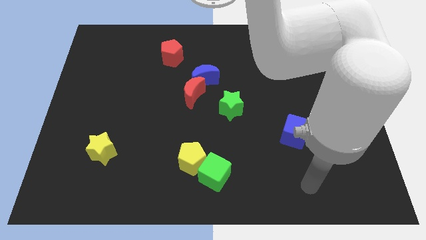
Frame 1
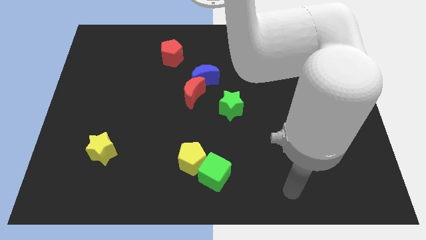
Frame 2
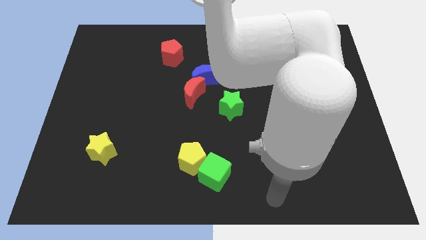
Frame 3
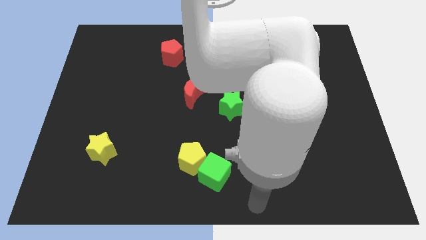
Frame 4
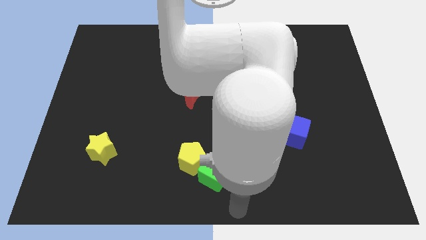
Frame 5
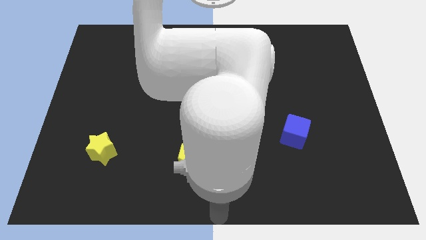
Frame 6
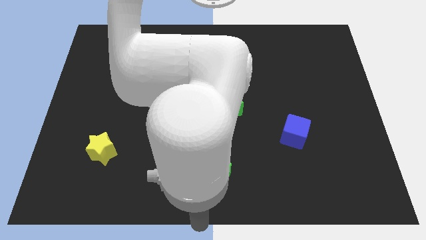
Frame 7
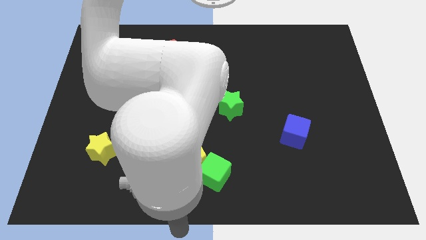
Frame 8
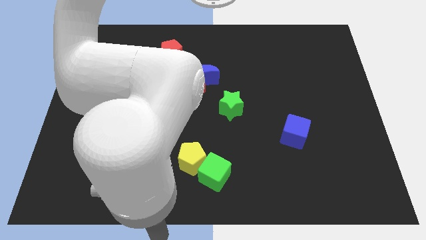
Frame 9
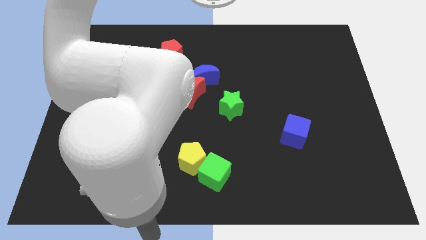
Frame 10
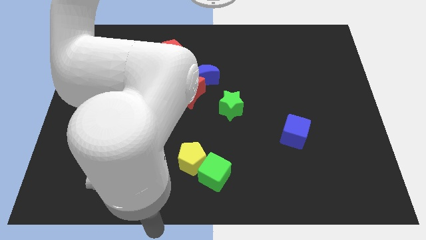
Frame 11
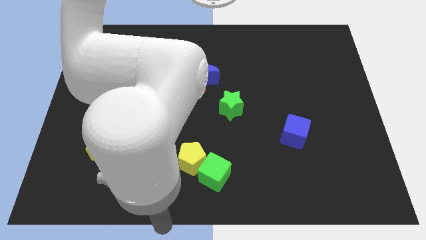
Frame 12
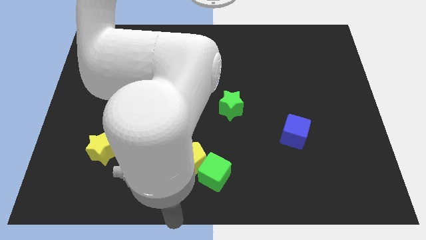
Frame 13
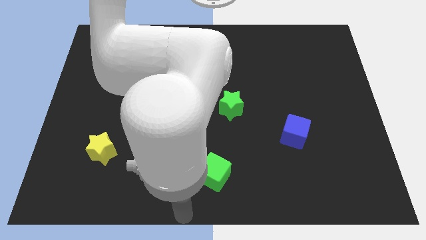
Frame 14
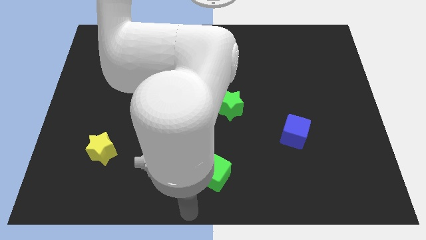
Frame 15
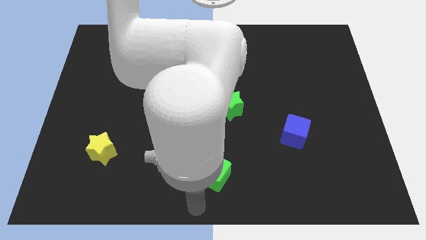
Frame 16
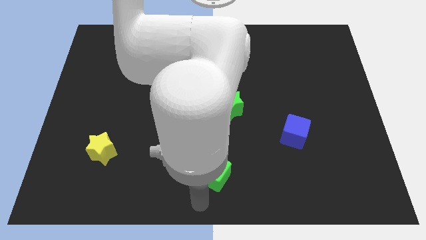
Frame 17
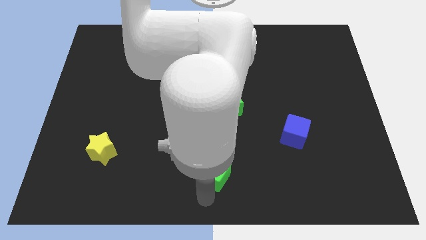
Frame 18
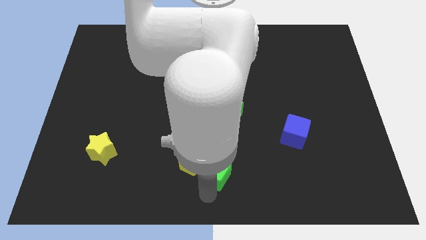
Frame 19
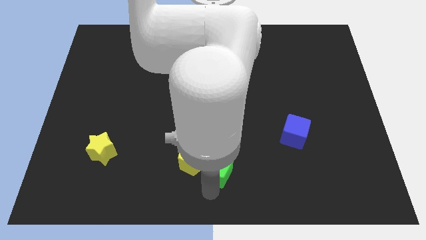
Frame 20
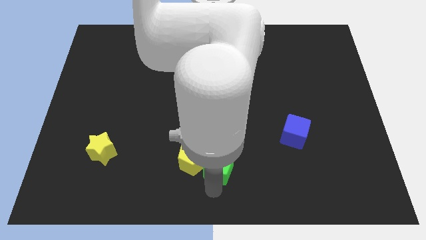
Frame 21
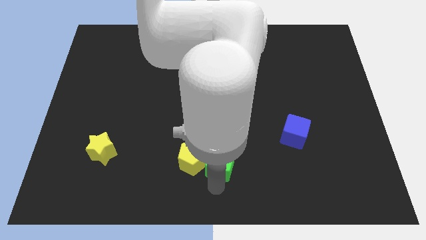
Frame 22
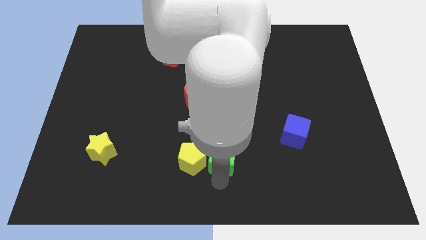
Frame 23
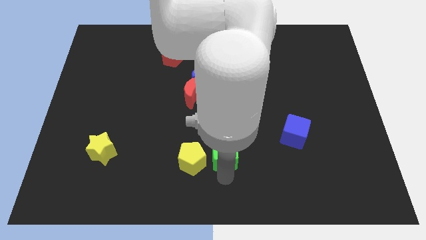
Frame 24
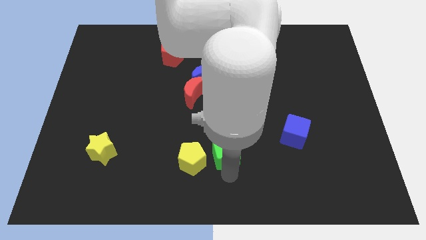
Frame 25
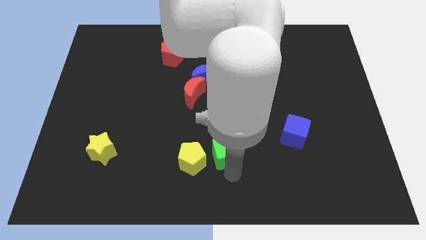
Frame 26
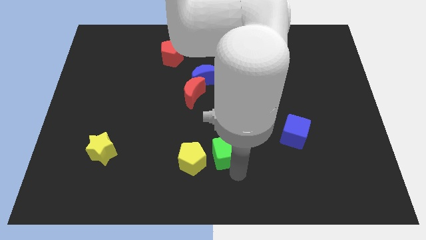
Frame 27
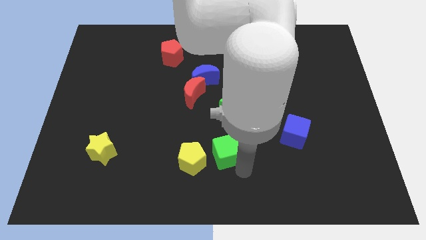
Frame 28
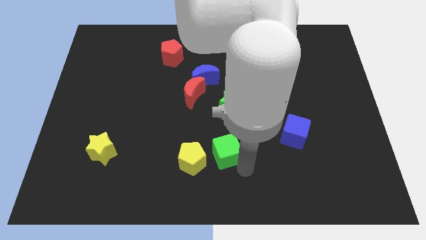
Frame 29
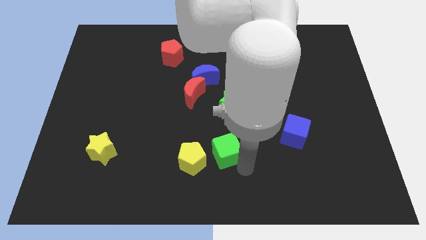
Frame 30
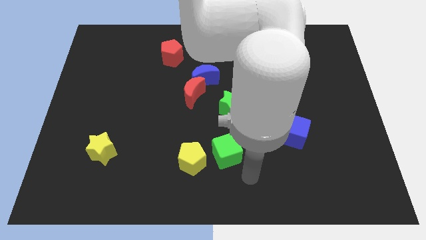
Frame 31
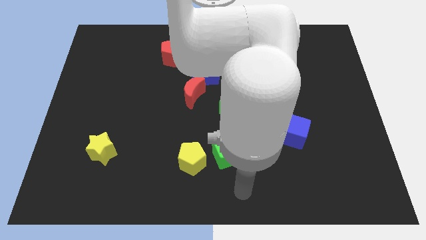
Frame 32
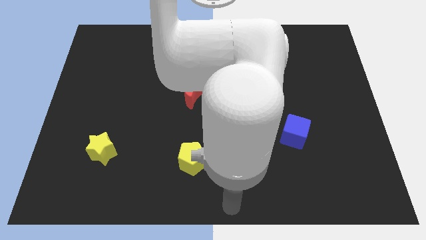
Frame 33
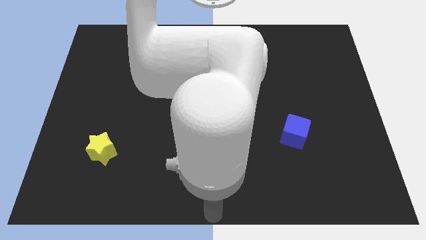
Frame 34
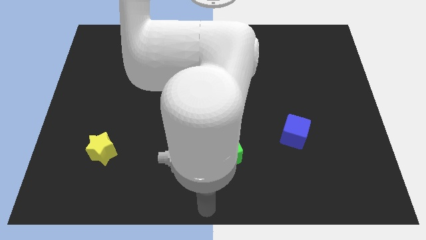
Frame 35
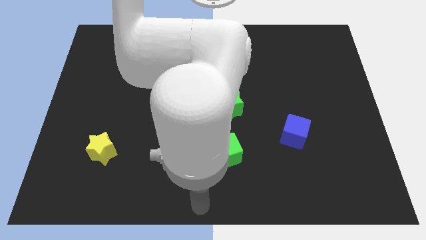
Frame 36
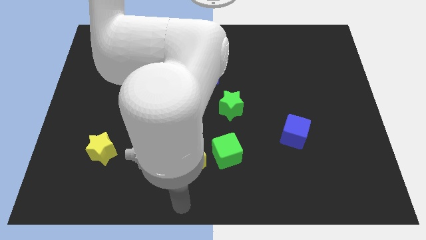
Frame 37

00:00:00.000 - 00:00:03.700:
place the green cube to the right side of the yellow pentagon

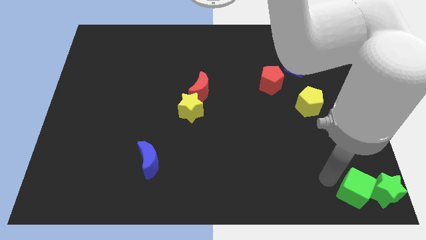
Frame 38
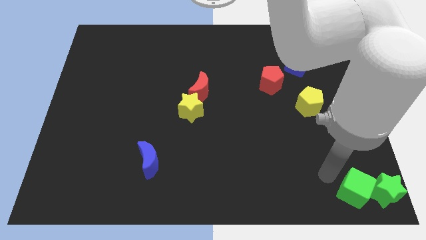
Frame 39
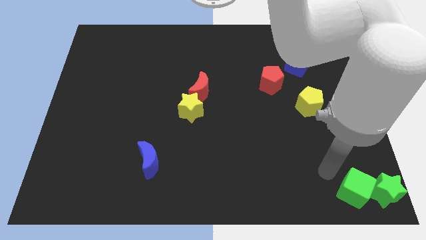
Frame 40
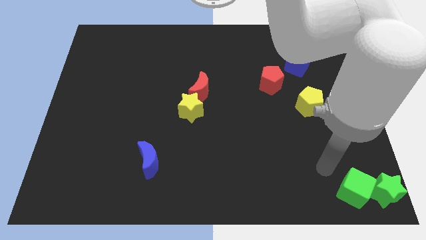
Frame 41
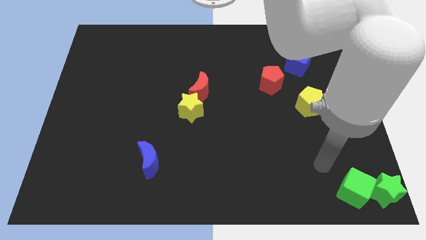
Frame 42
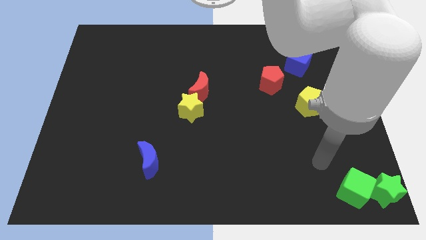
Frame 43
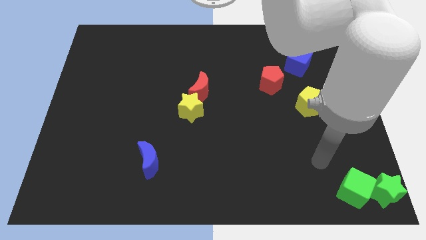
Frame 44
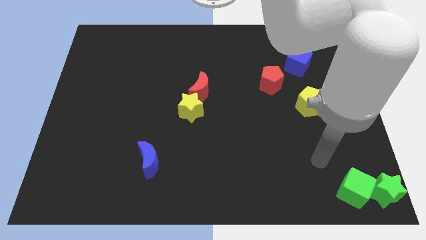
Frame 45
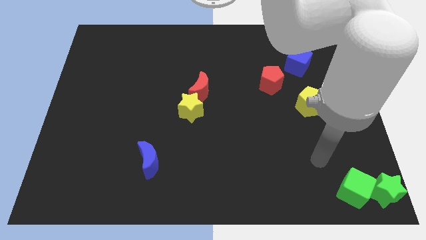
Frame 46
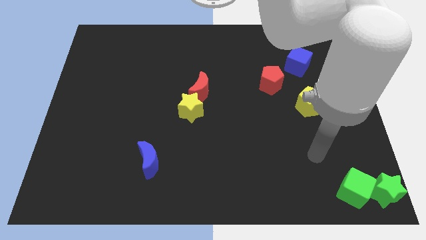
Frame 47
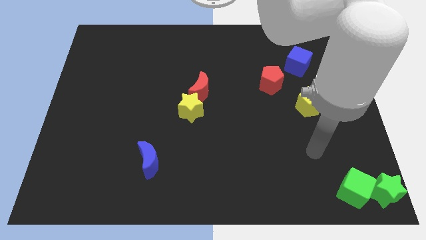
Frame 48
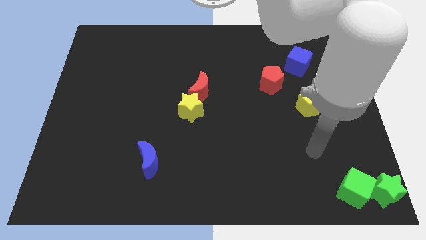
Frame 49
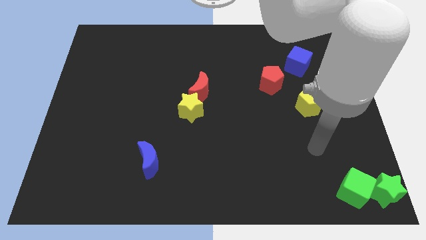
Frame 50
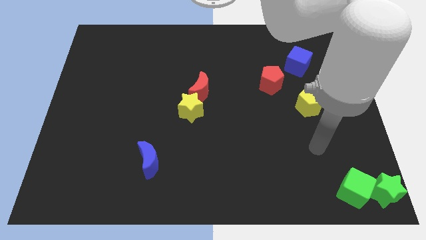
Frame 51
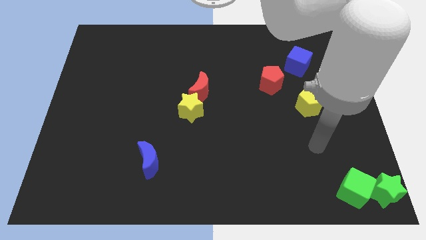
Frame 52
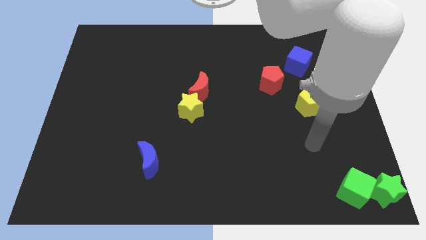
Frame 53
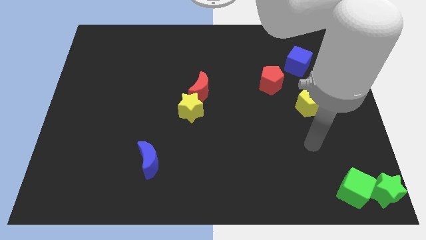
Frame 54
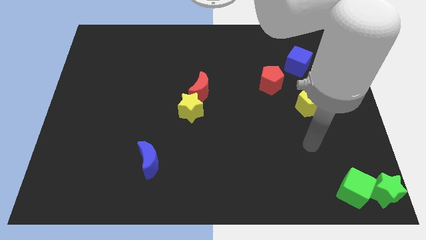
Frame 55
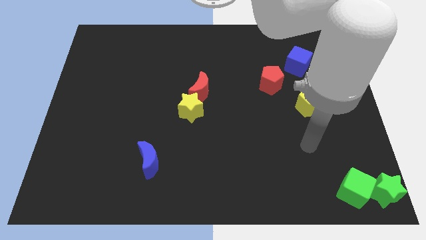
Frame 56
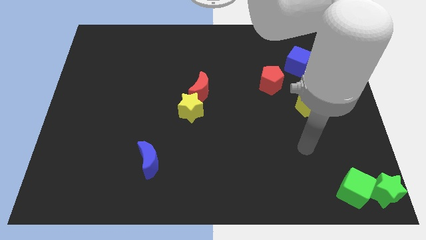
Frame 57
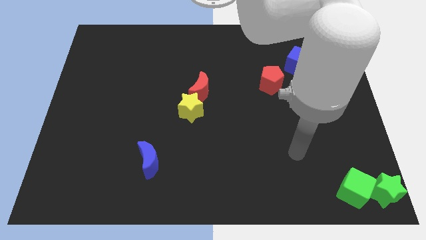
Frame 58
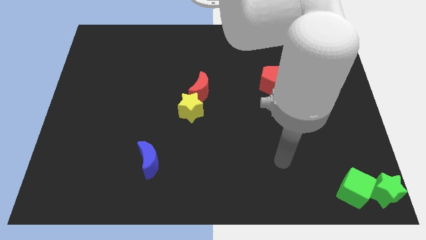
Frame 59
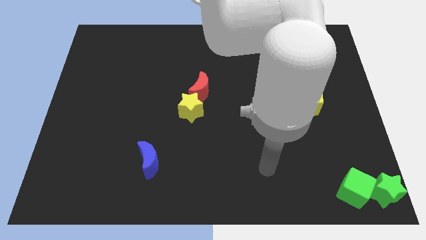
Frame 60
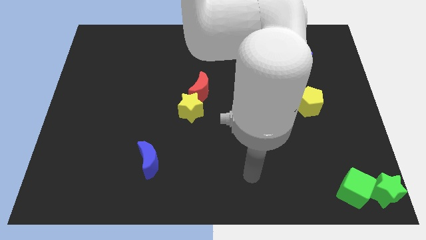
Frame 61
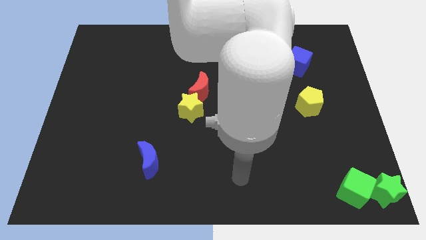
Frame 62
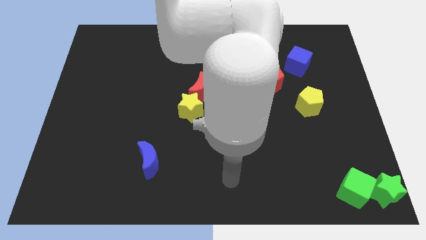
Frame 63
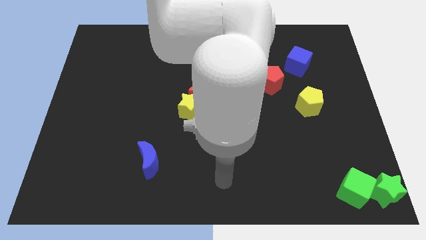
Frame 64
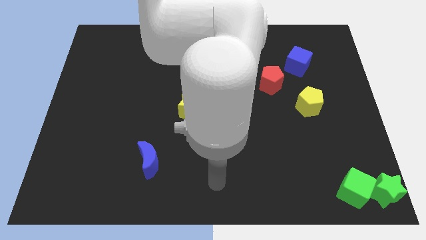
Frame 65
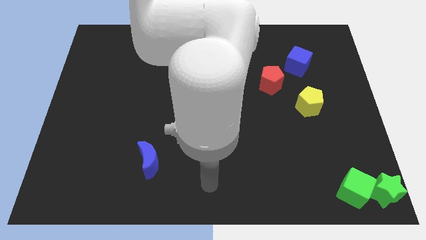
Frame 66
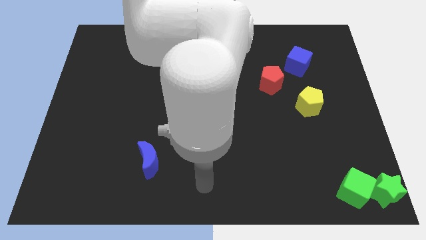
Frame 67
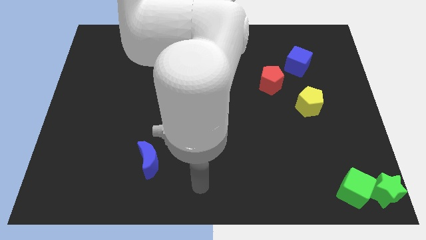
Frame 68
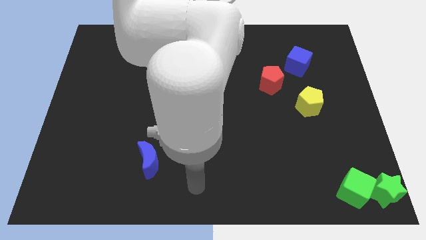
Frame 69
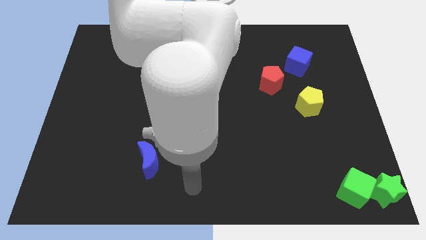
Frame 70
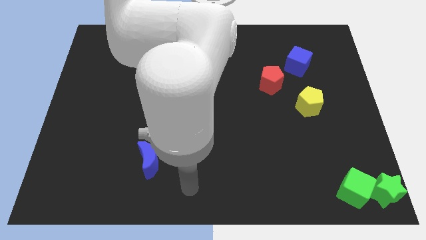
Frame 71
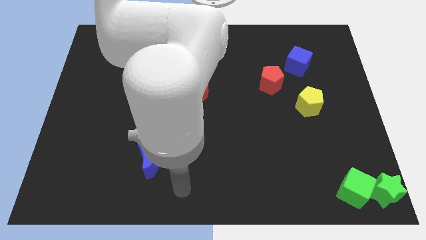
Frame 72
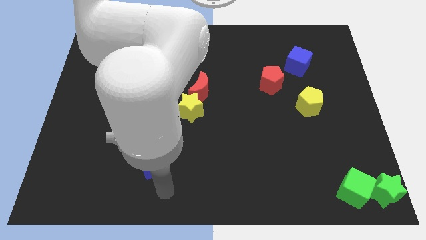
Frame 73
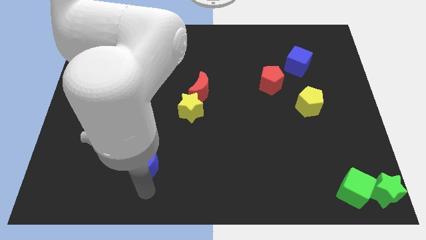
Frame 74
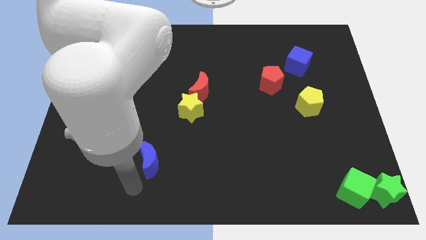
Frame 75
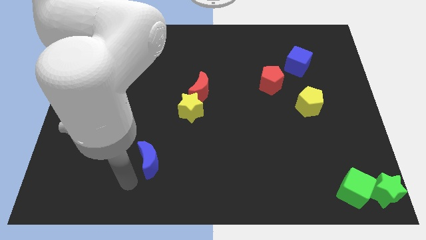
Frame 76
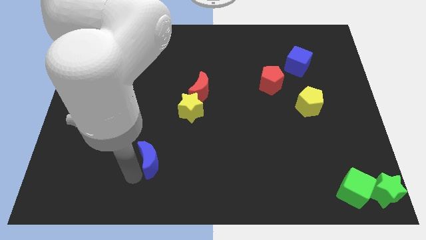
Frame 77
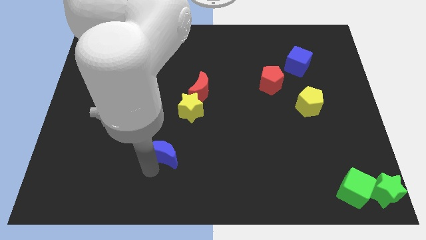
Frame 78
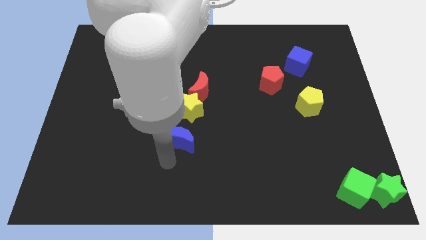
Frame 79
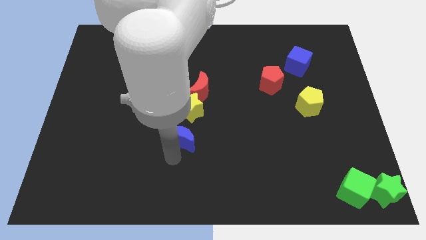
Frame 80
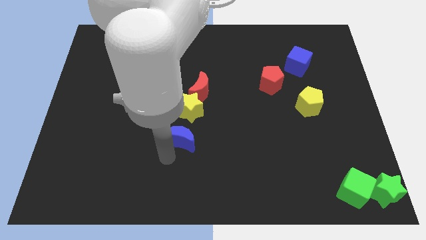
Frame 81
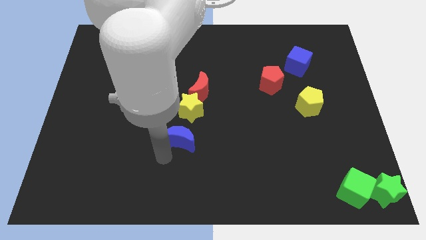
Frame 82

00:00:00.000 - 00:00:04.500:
push the blue crescent to the bottom of the yellow star vertically

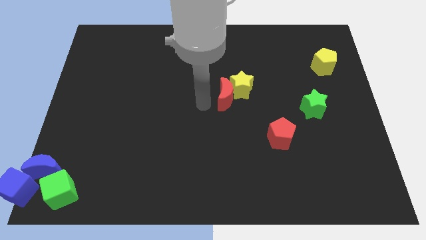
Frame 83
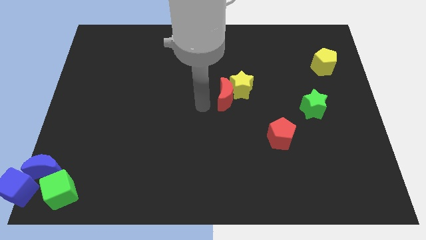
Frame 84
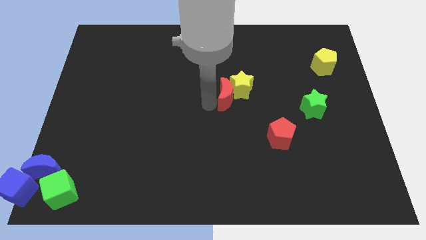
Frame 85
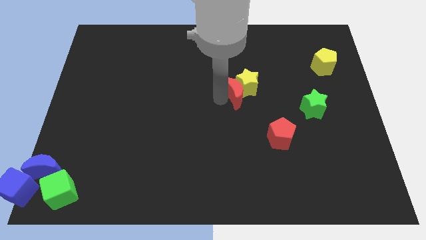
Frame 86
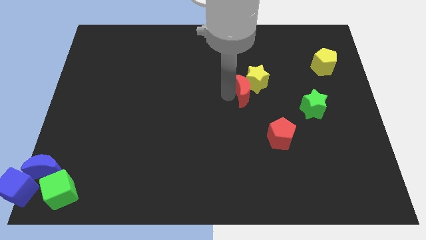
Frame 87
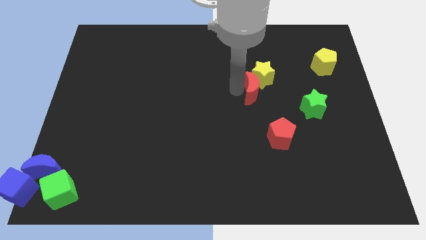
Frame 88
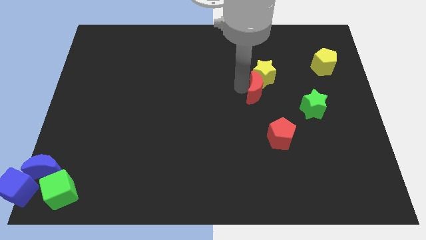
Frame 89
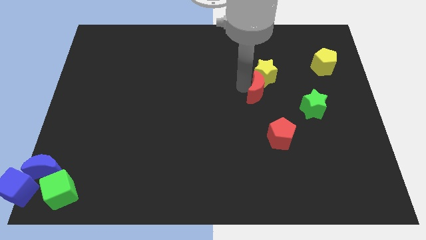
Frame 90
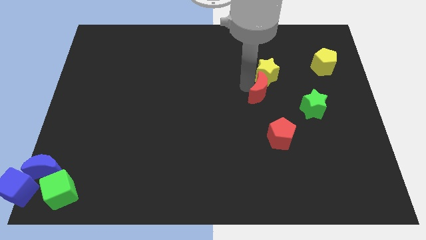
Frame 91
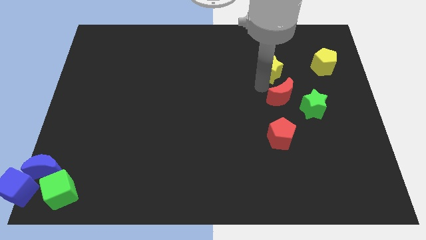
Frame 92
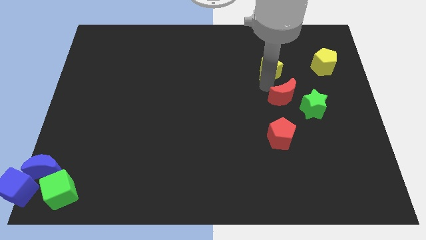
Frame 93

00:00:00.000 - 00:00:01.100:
push the red moon and yellow star to the top right
